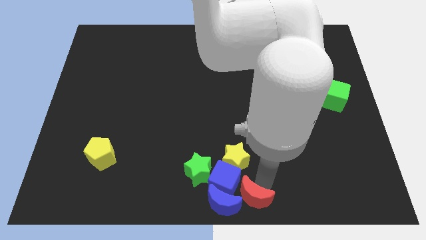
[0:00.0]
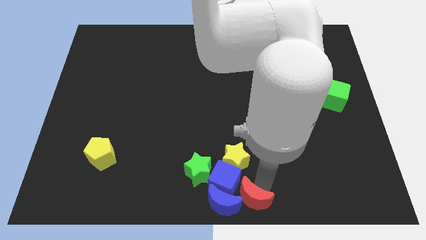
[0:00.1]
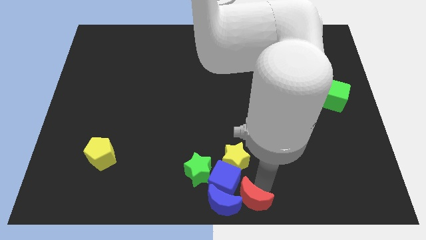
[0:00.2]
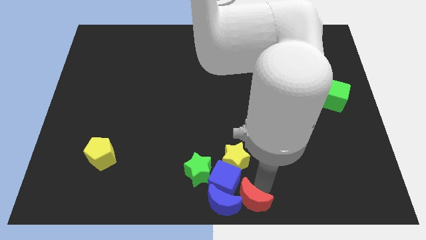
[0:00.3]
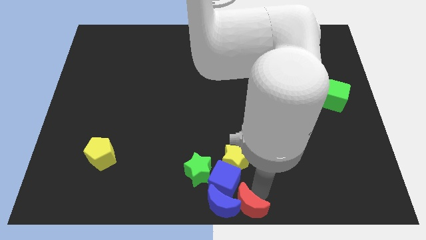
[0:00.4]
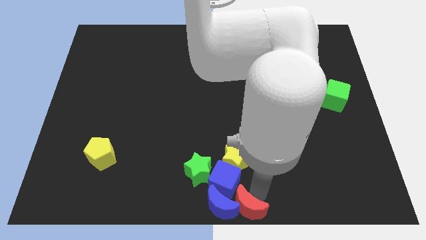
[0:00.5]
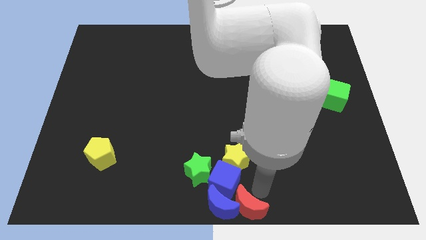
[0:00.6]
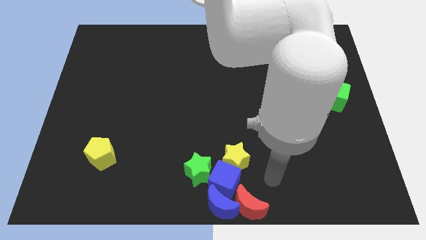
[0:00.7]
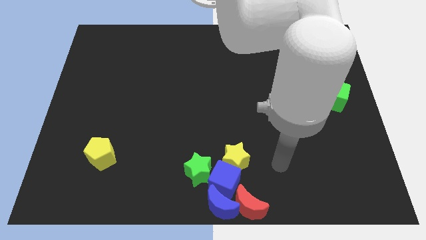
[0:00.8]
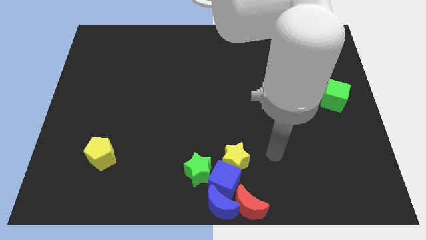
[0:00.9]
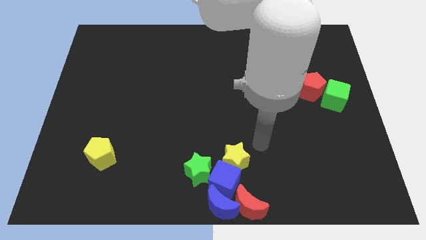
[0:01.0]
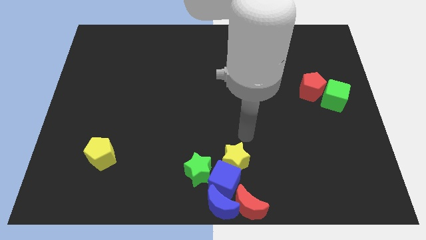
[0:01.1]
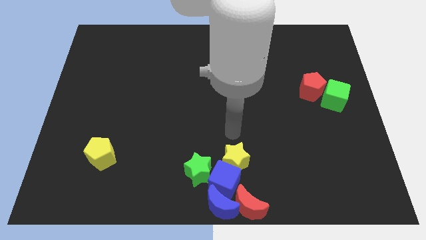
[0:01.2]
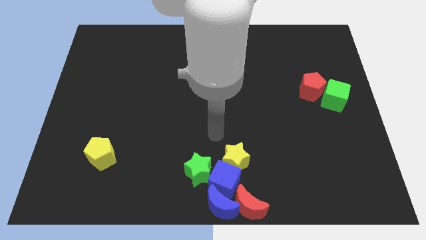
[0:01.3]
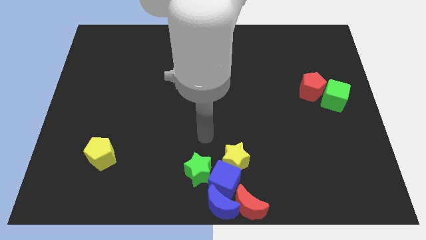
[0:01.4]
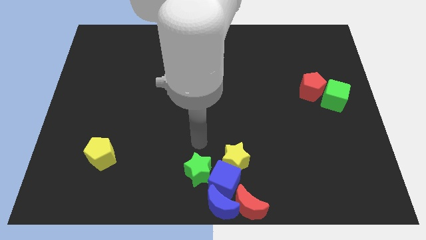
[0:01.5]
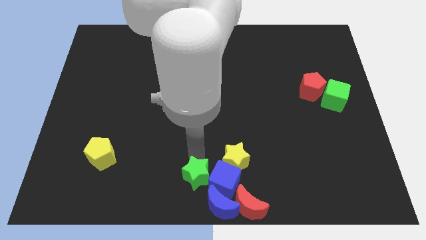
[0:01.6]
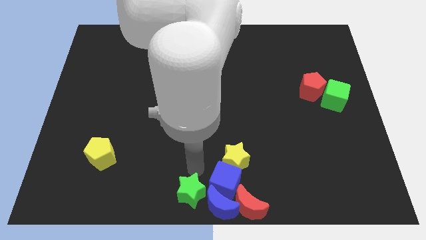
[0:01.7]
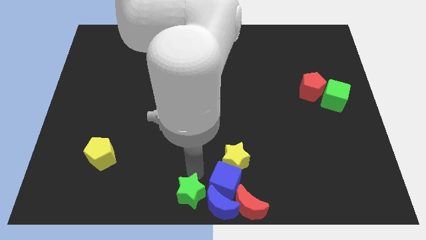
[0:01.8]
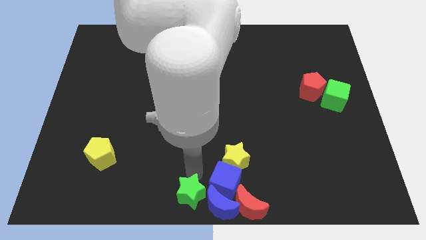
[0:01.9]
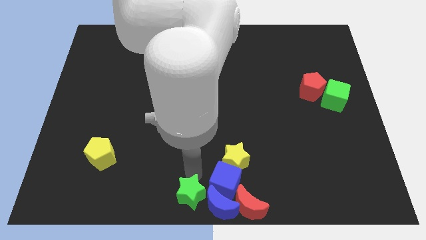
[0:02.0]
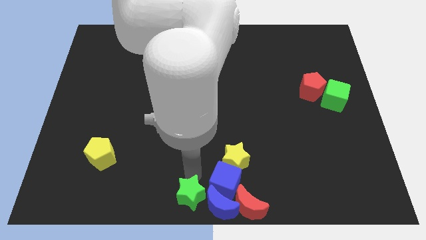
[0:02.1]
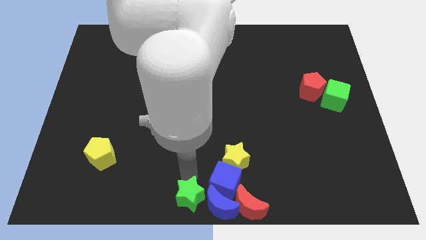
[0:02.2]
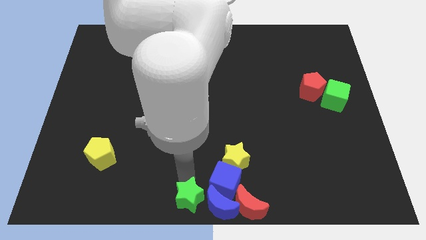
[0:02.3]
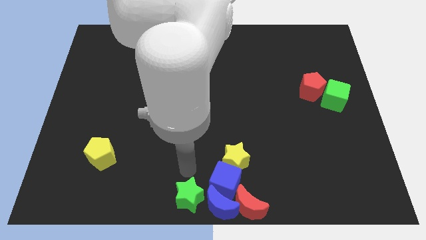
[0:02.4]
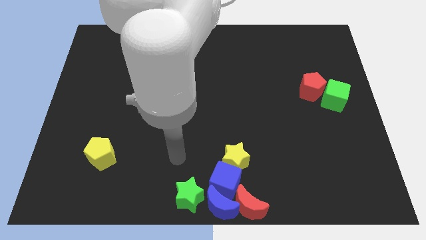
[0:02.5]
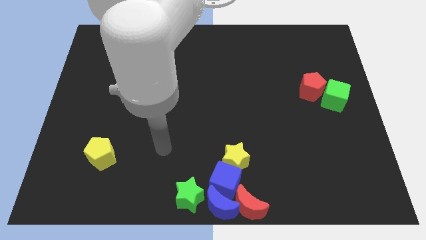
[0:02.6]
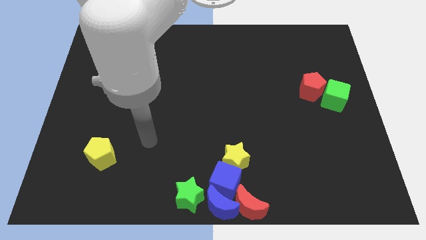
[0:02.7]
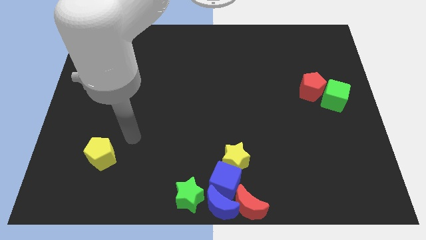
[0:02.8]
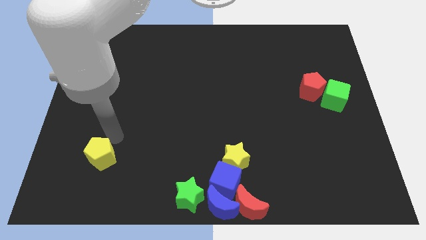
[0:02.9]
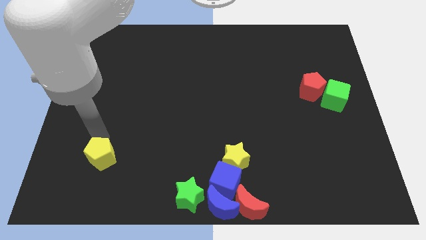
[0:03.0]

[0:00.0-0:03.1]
push the red crescent and green star towards the bottom center of the board

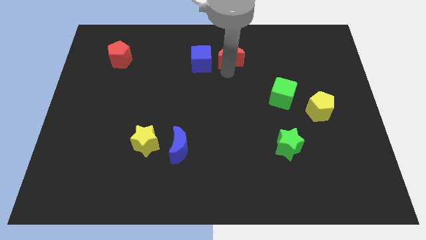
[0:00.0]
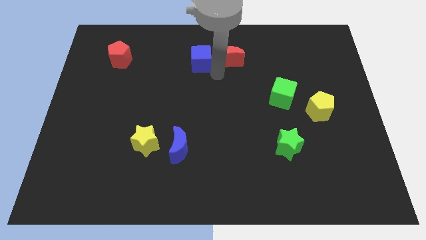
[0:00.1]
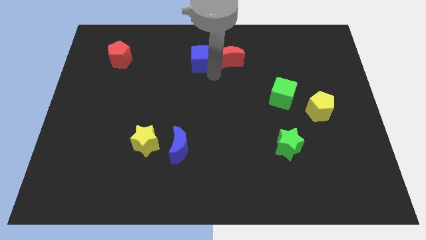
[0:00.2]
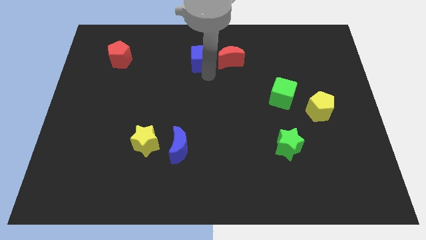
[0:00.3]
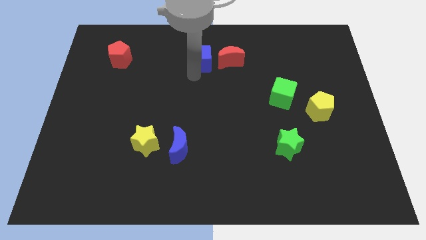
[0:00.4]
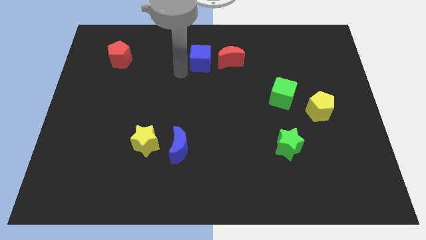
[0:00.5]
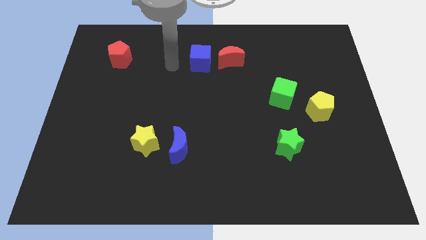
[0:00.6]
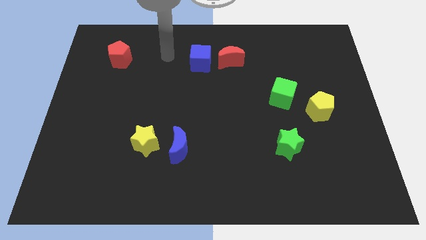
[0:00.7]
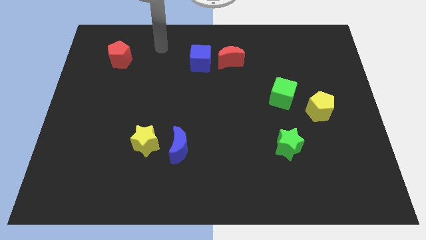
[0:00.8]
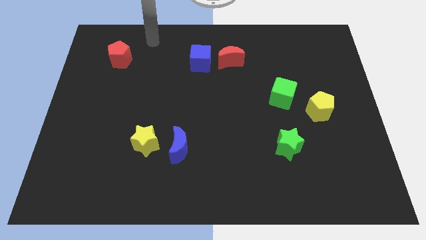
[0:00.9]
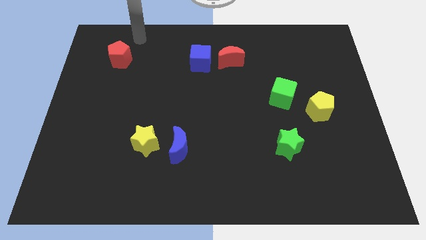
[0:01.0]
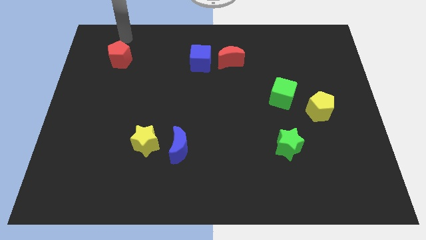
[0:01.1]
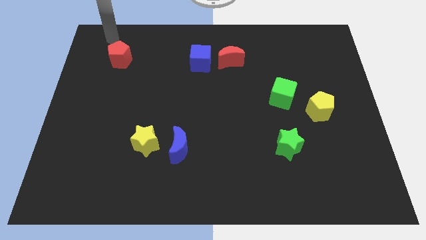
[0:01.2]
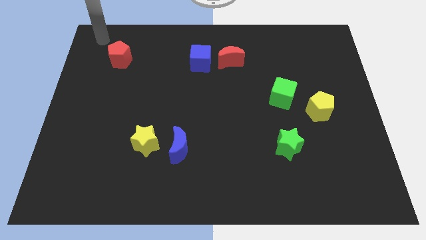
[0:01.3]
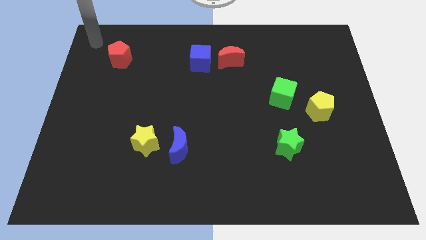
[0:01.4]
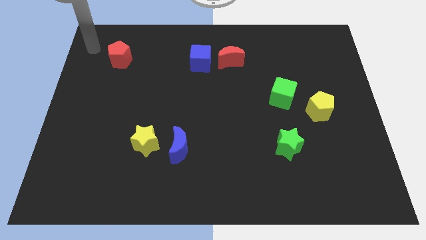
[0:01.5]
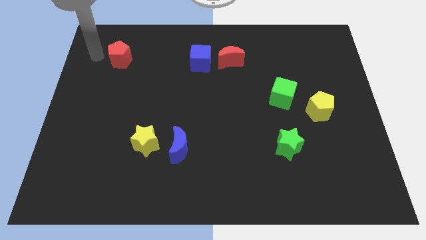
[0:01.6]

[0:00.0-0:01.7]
move to the left side of the red pentagon

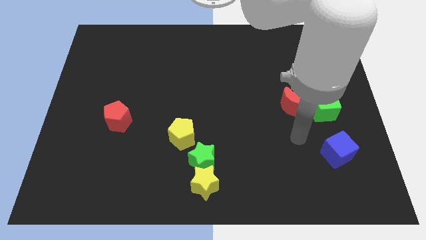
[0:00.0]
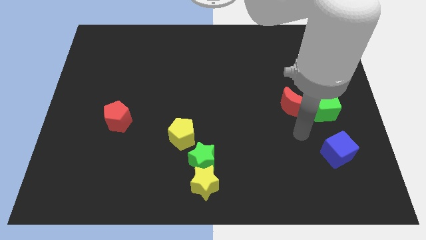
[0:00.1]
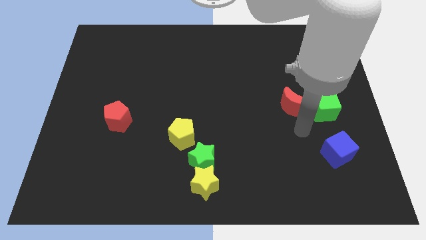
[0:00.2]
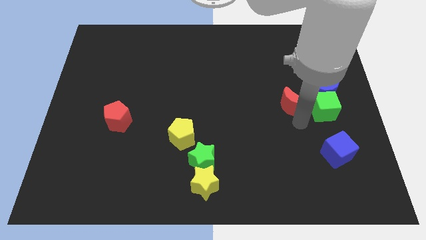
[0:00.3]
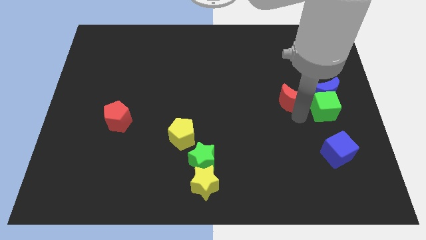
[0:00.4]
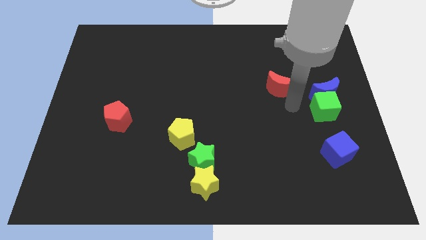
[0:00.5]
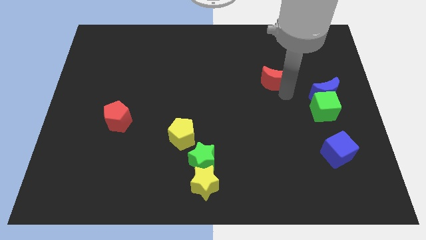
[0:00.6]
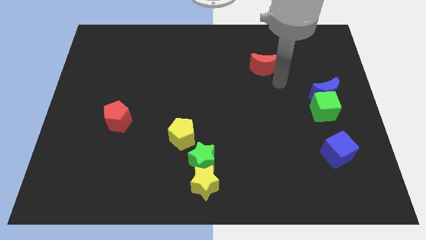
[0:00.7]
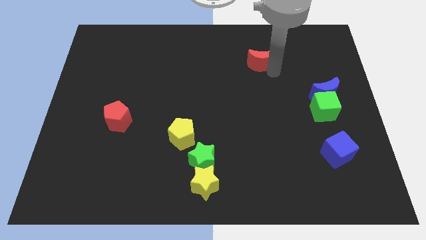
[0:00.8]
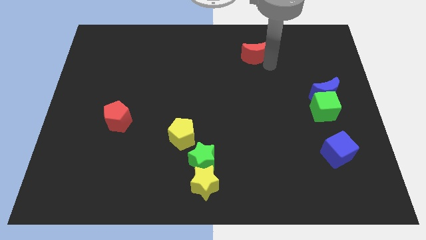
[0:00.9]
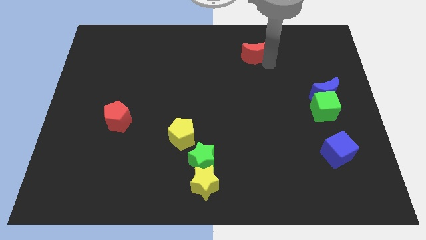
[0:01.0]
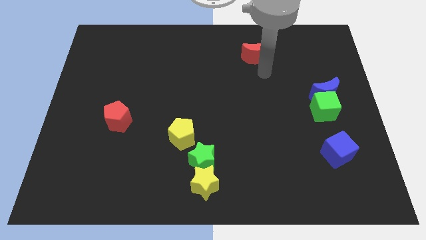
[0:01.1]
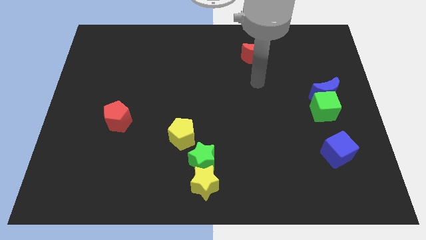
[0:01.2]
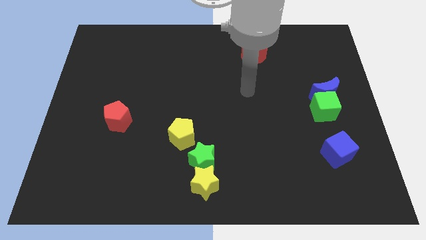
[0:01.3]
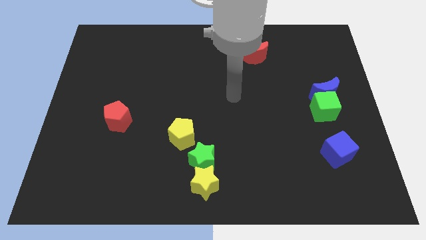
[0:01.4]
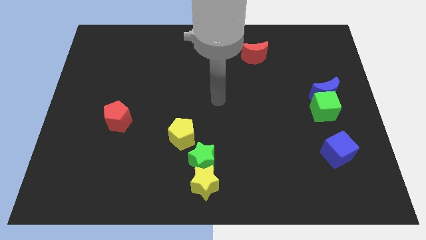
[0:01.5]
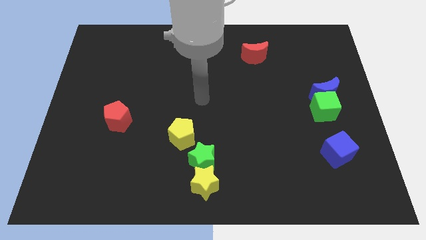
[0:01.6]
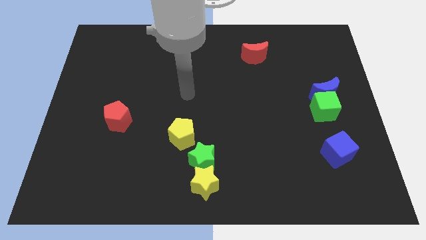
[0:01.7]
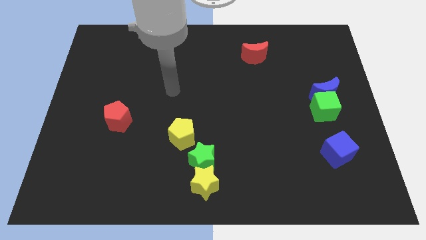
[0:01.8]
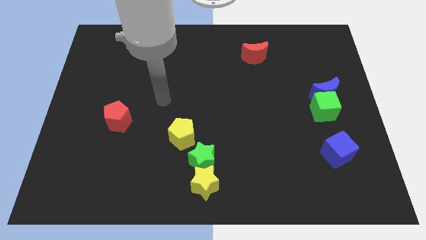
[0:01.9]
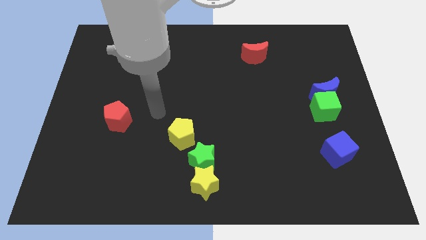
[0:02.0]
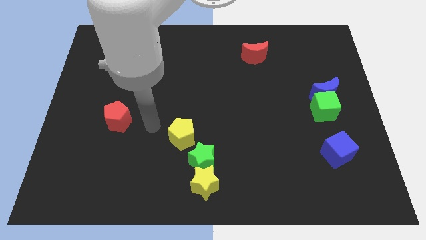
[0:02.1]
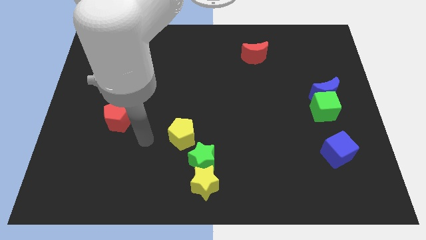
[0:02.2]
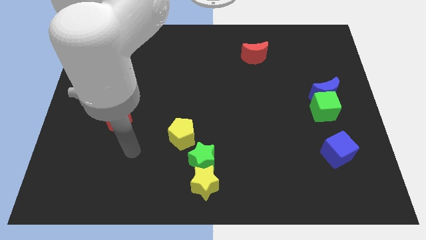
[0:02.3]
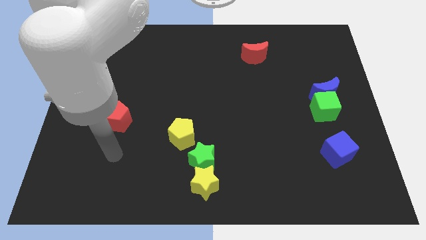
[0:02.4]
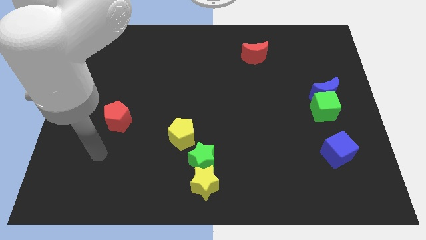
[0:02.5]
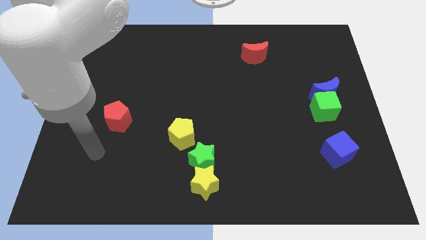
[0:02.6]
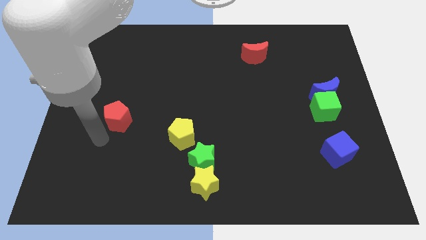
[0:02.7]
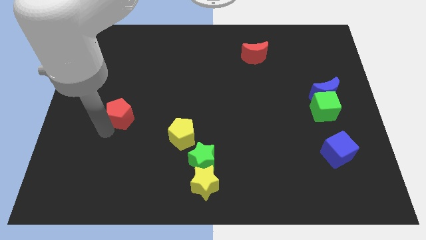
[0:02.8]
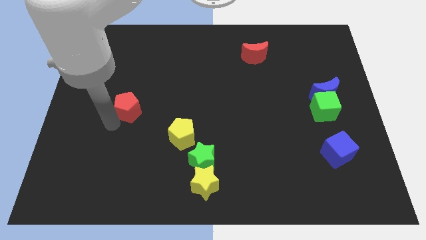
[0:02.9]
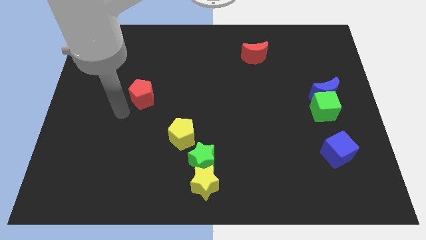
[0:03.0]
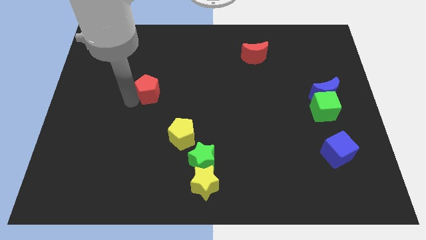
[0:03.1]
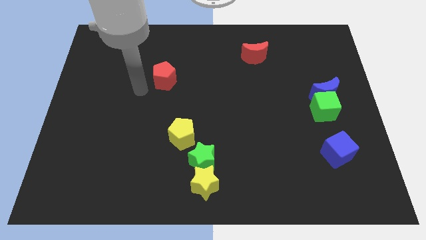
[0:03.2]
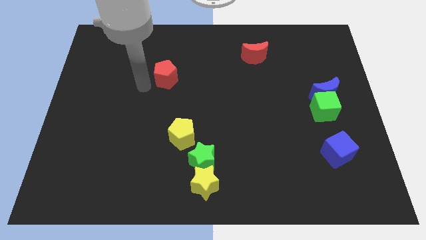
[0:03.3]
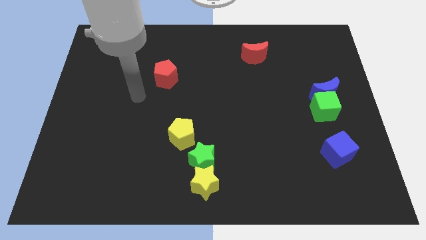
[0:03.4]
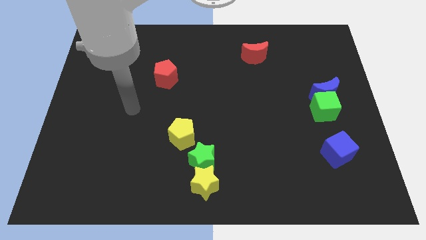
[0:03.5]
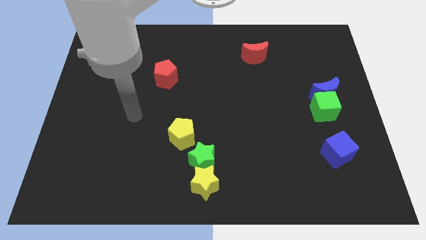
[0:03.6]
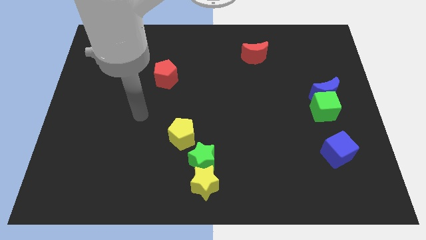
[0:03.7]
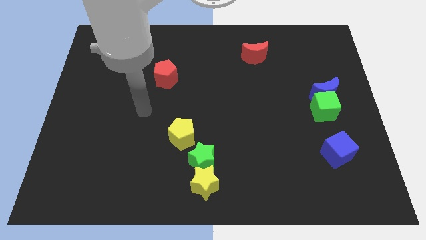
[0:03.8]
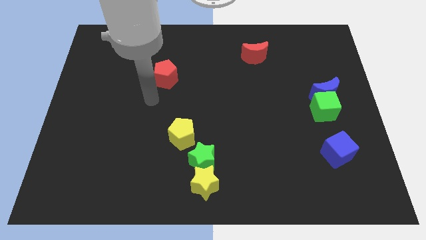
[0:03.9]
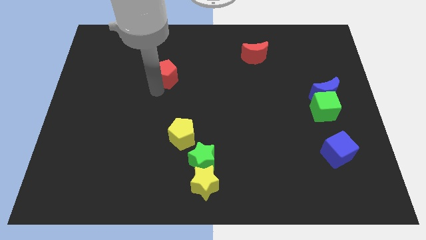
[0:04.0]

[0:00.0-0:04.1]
move the red crescent away from the green cube
